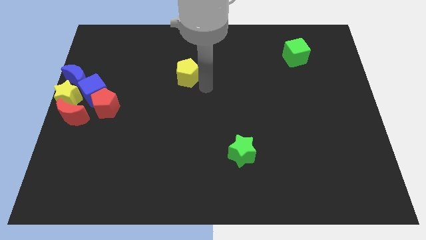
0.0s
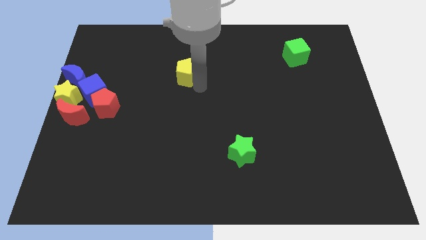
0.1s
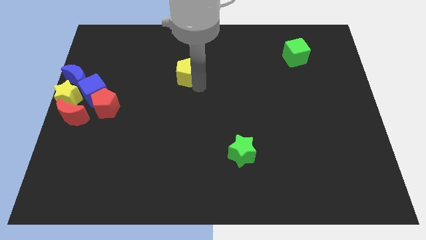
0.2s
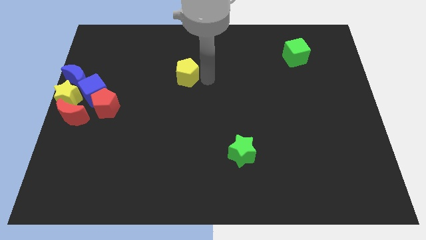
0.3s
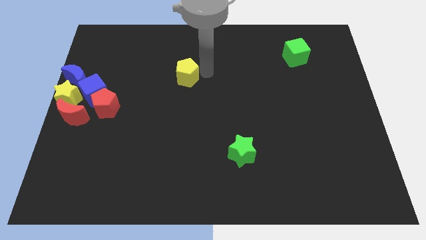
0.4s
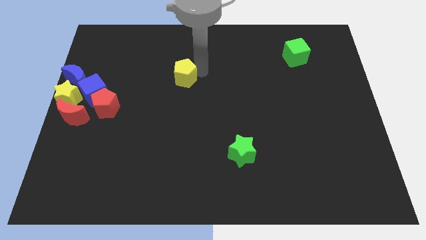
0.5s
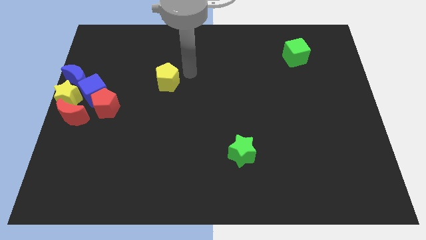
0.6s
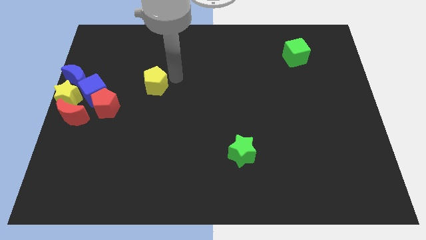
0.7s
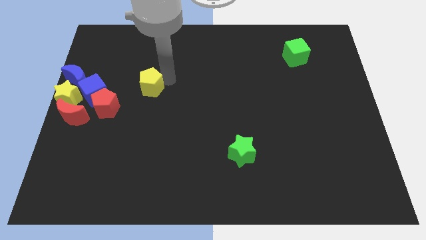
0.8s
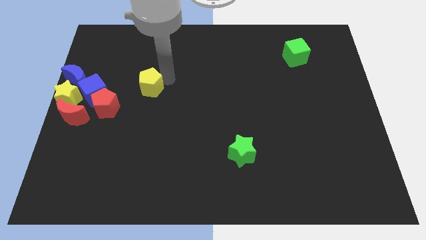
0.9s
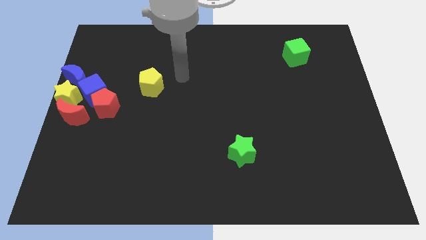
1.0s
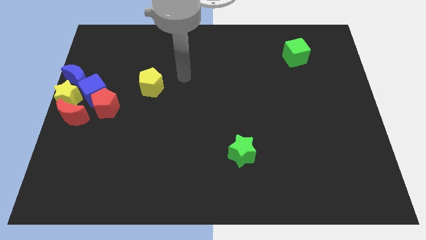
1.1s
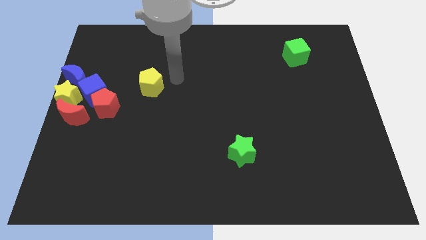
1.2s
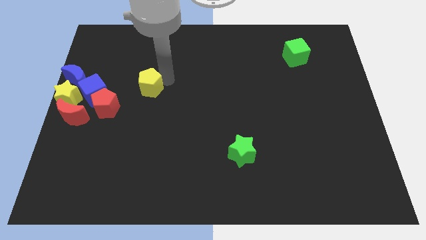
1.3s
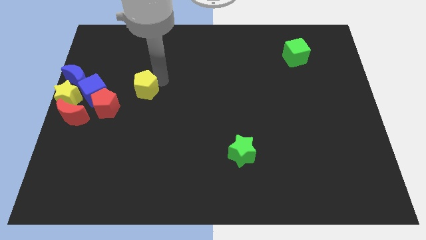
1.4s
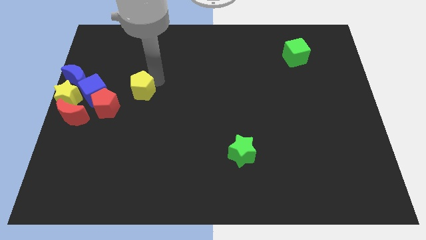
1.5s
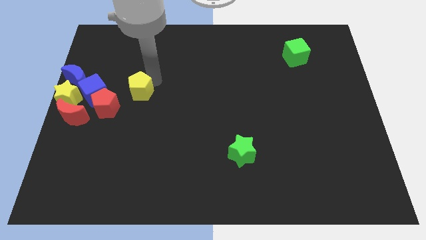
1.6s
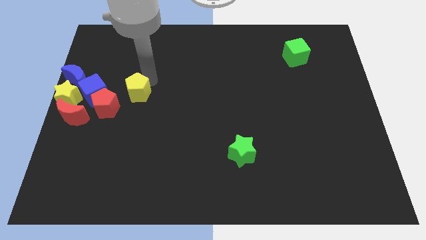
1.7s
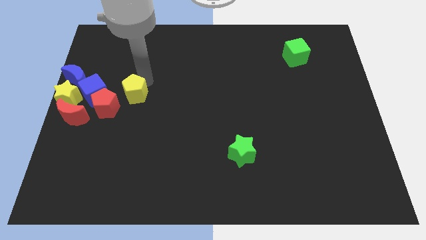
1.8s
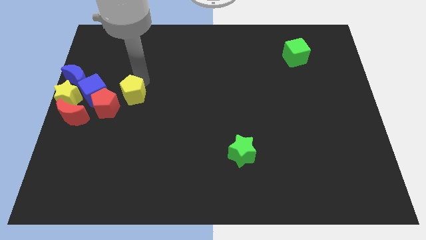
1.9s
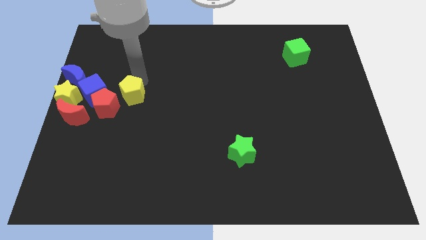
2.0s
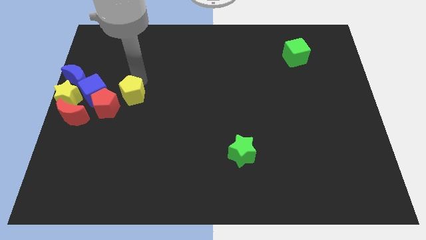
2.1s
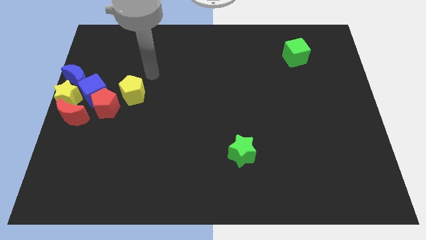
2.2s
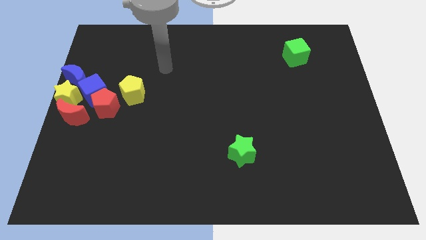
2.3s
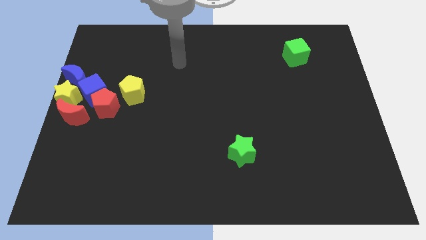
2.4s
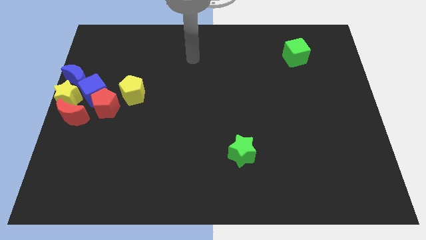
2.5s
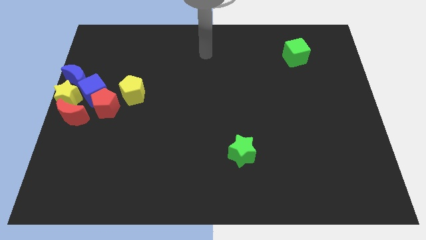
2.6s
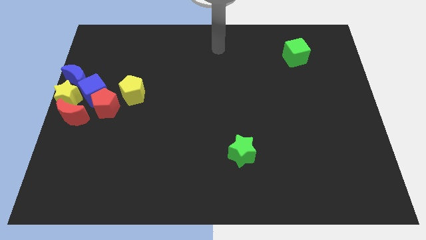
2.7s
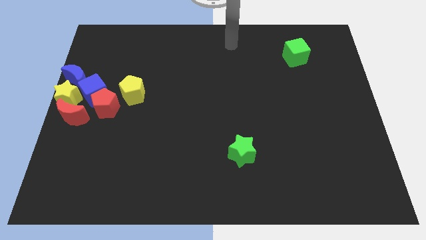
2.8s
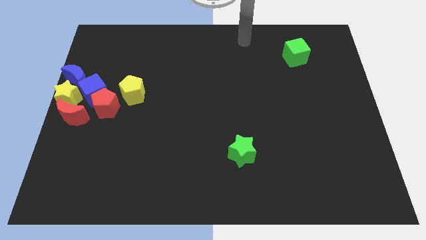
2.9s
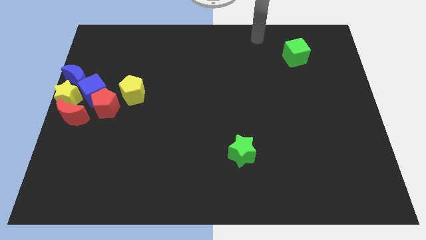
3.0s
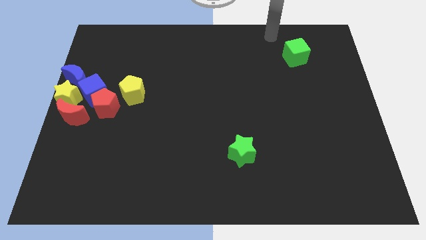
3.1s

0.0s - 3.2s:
drag the yellow pentagon towards the red pentagon

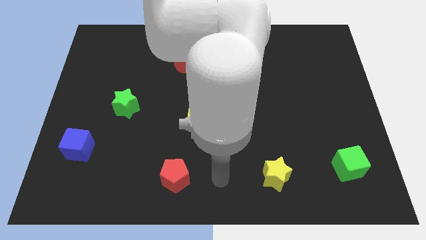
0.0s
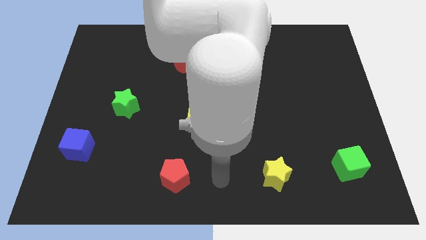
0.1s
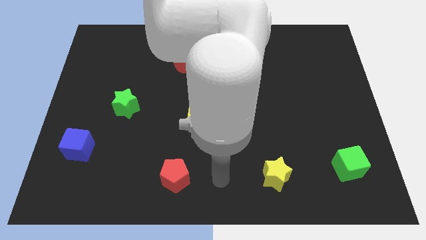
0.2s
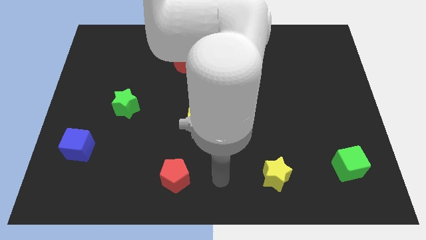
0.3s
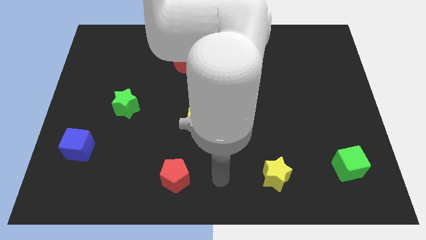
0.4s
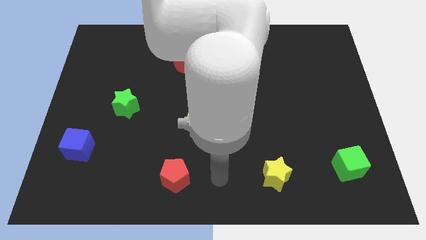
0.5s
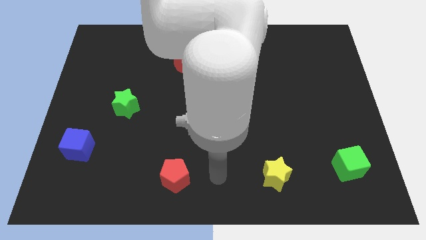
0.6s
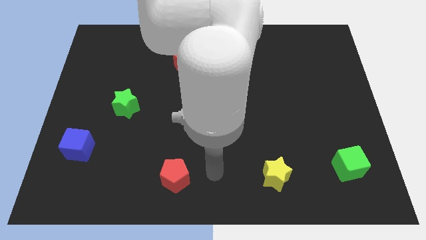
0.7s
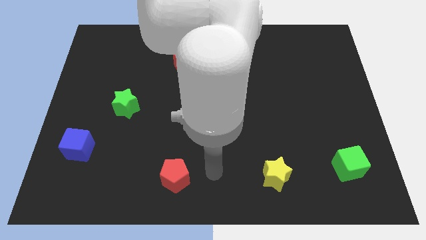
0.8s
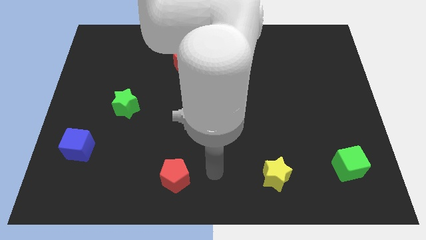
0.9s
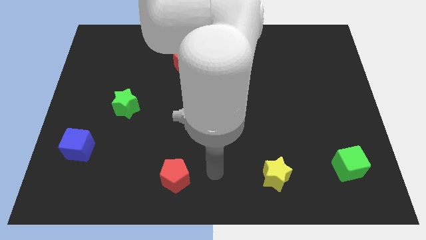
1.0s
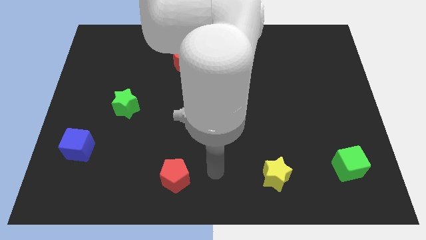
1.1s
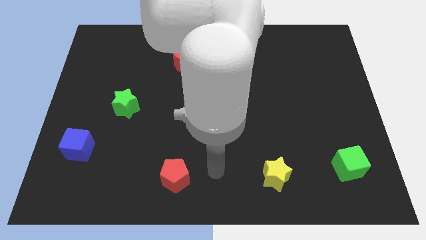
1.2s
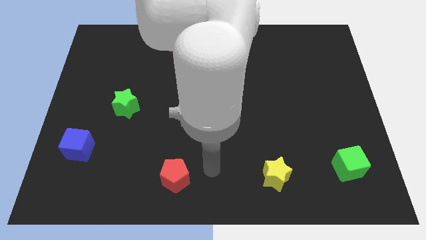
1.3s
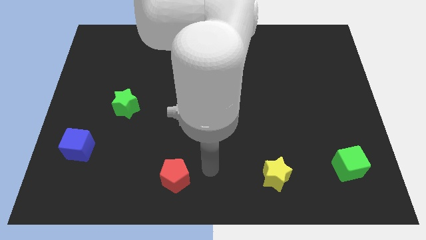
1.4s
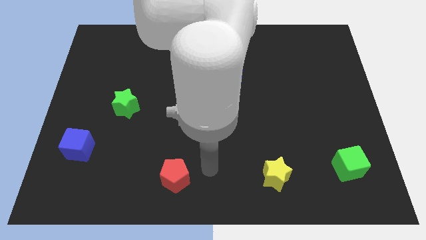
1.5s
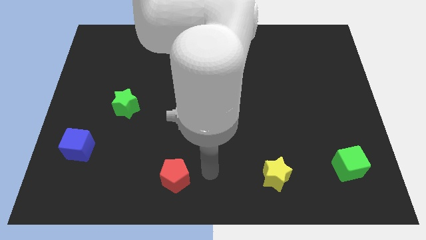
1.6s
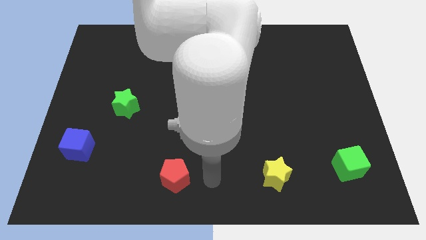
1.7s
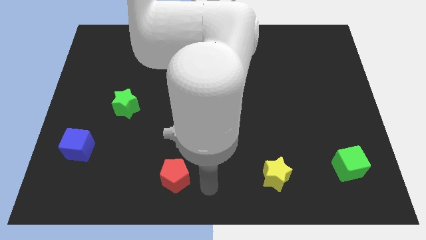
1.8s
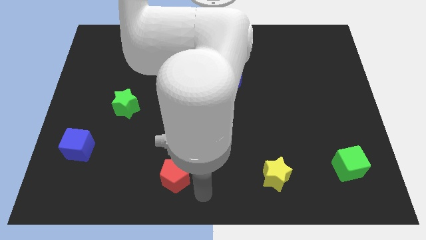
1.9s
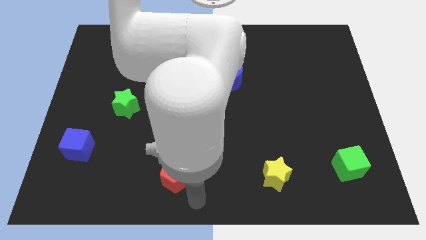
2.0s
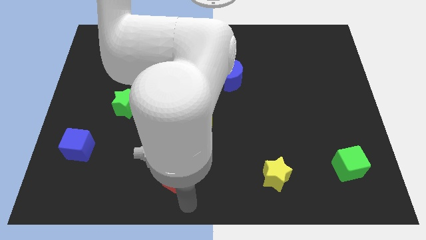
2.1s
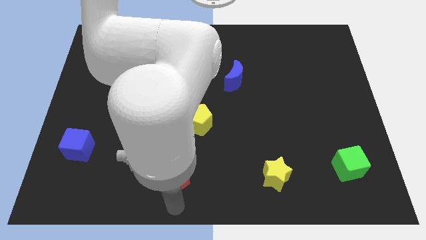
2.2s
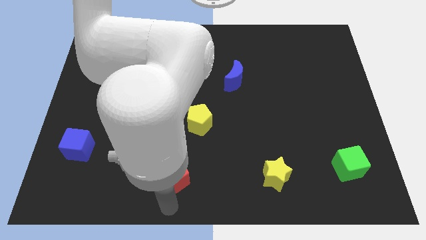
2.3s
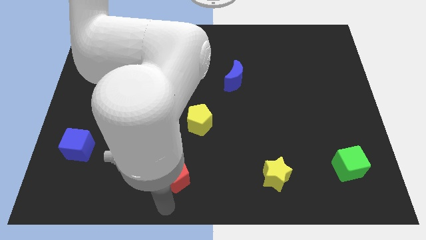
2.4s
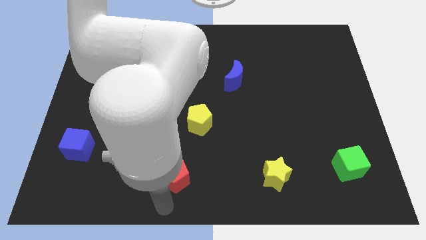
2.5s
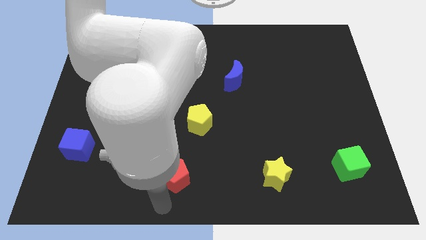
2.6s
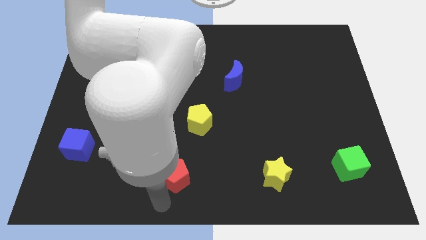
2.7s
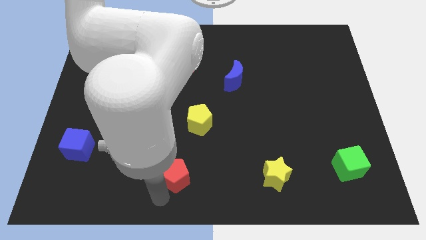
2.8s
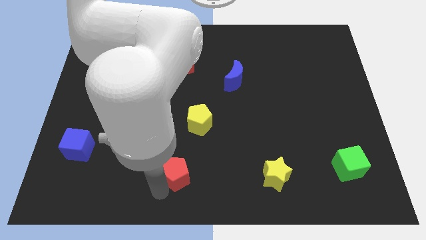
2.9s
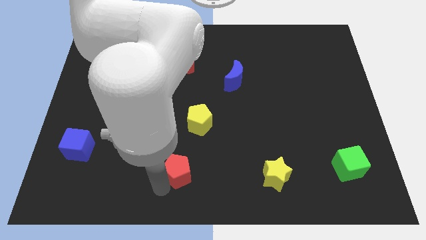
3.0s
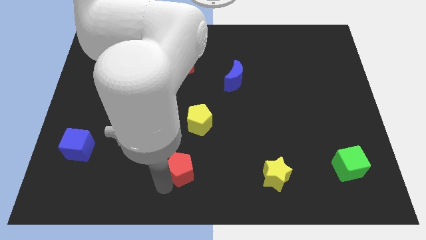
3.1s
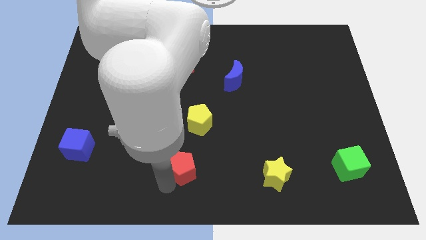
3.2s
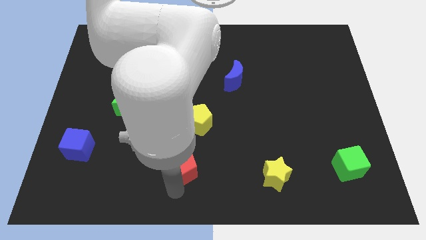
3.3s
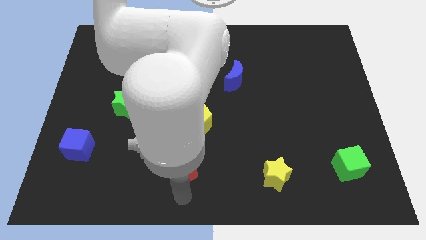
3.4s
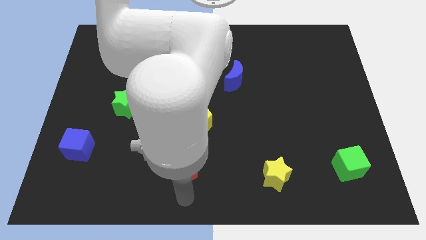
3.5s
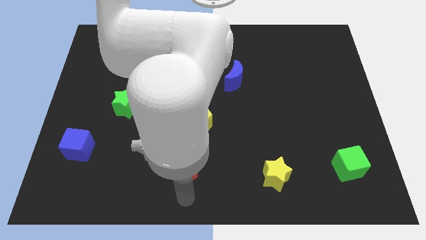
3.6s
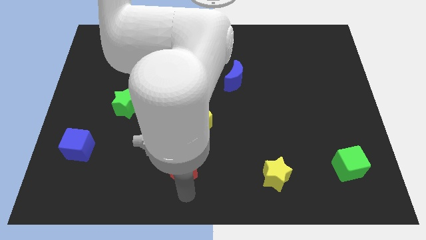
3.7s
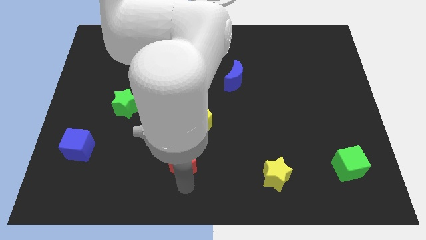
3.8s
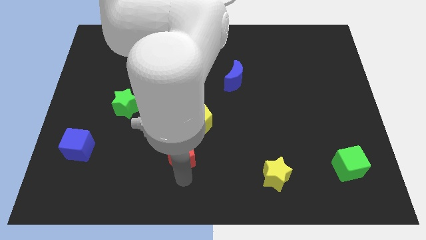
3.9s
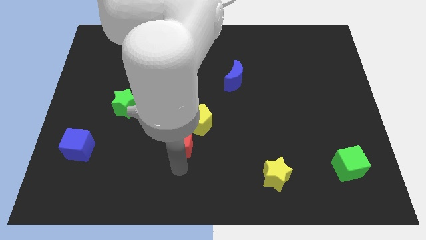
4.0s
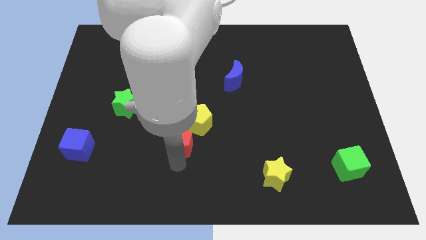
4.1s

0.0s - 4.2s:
push the red pentagon slightly upwards

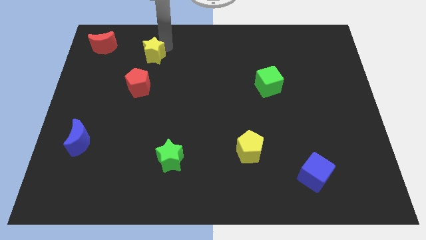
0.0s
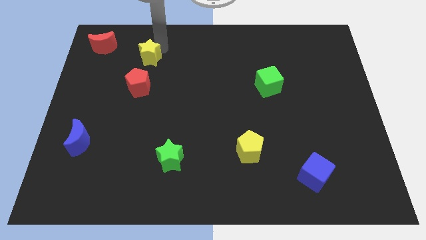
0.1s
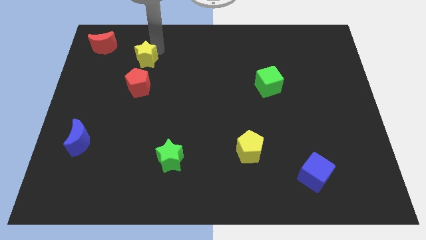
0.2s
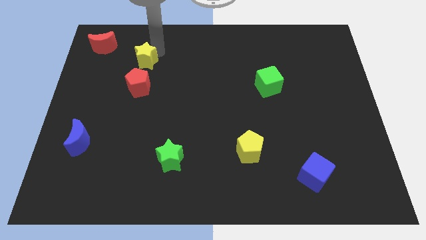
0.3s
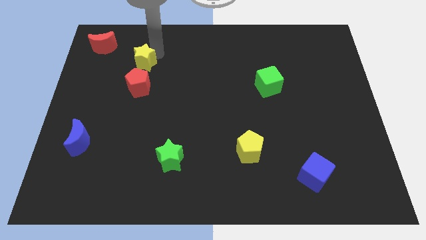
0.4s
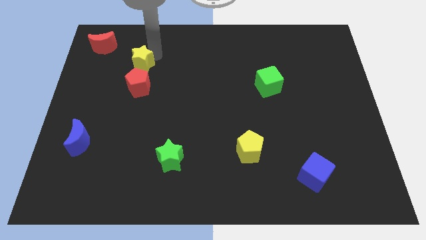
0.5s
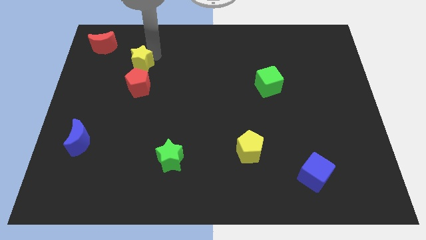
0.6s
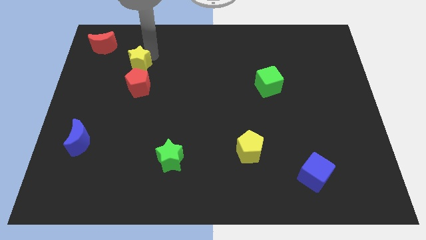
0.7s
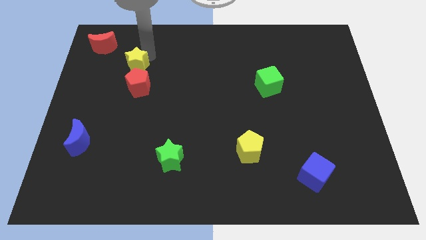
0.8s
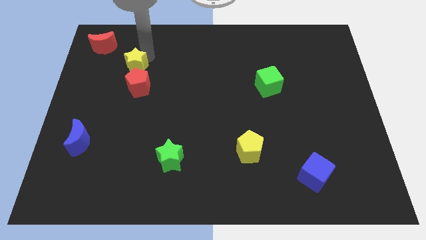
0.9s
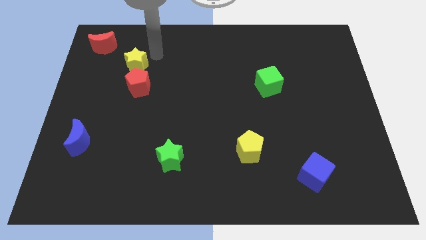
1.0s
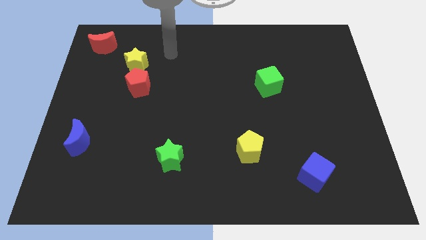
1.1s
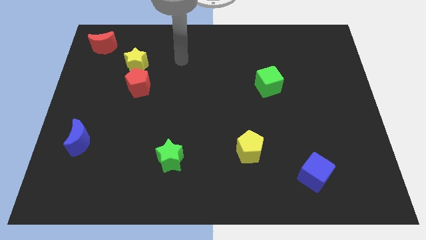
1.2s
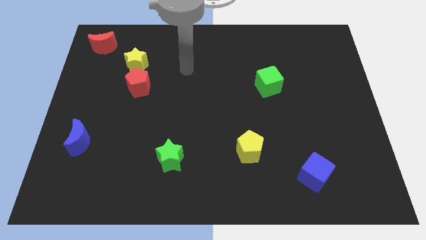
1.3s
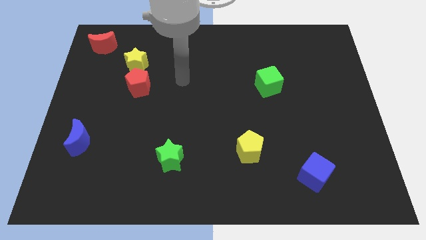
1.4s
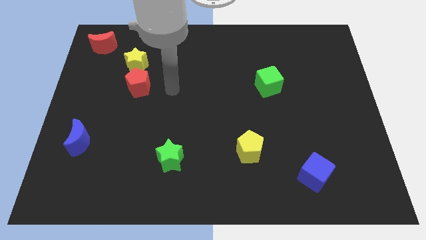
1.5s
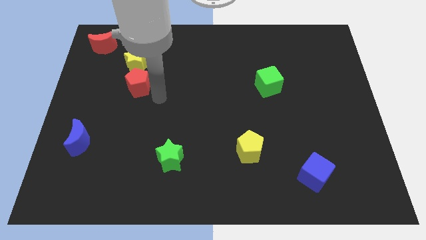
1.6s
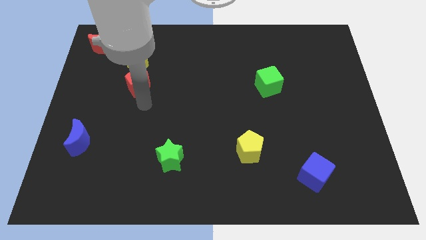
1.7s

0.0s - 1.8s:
move yellow star slightly down

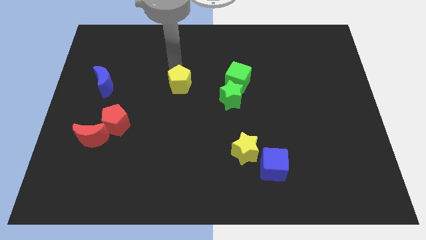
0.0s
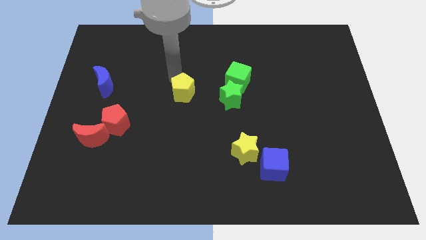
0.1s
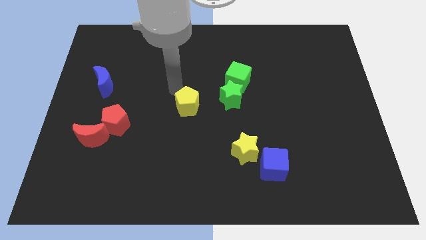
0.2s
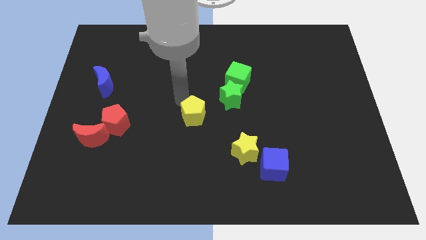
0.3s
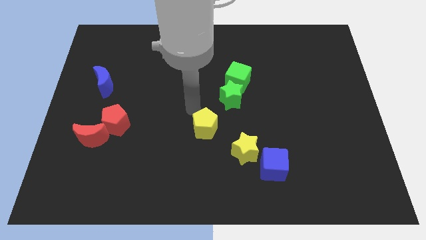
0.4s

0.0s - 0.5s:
push the yellow pentagon at the center of the board
